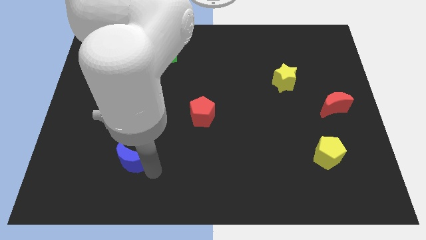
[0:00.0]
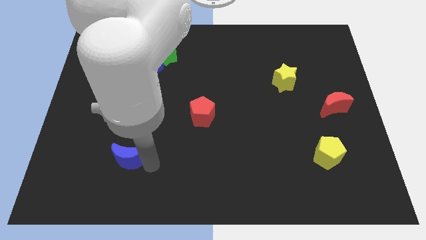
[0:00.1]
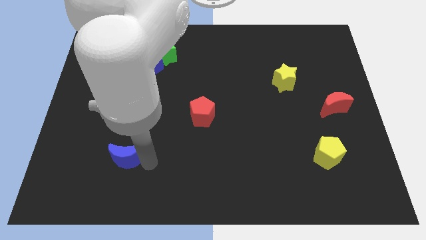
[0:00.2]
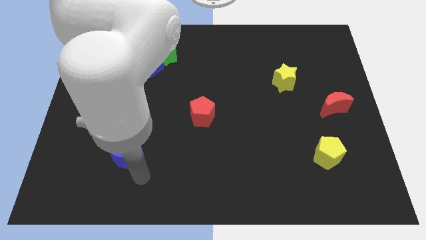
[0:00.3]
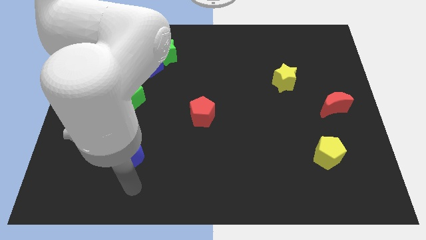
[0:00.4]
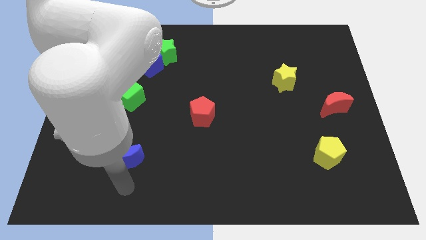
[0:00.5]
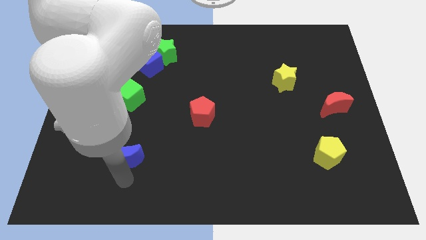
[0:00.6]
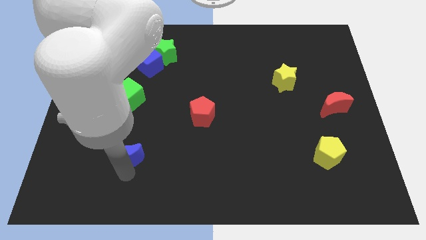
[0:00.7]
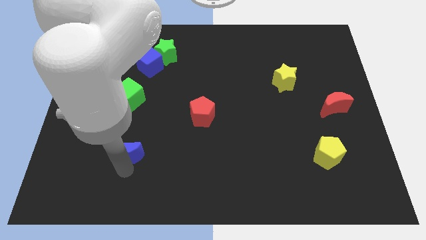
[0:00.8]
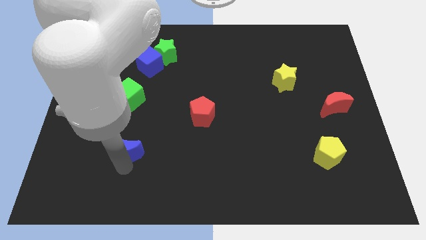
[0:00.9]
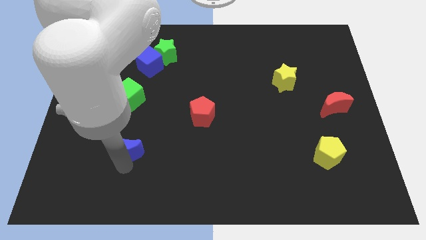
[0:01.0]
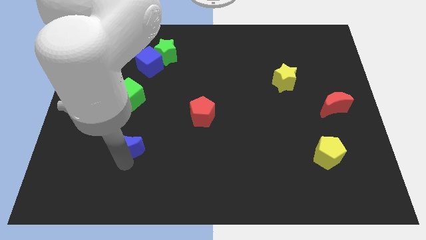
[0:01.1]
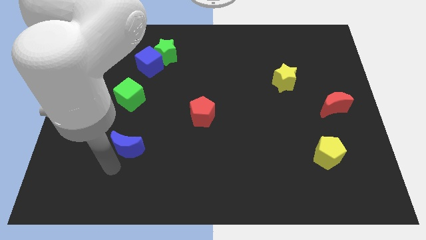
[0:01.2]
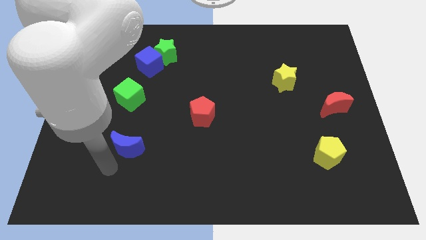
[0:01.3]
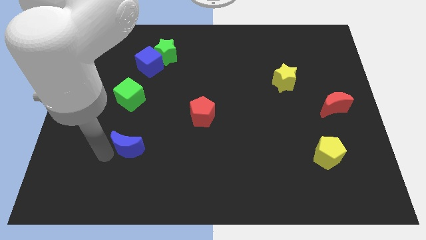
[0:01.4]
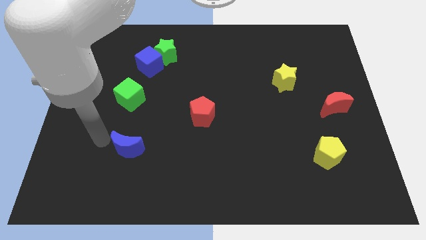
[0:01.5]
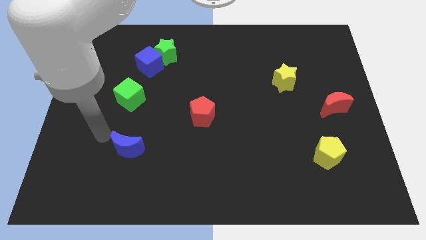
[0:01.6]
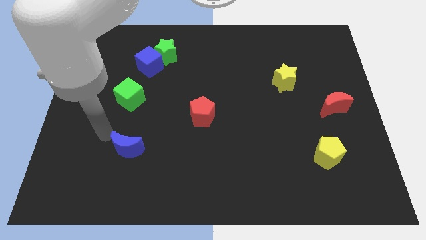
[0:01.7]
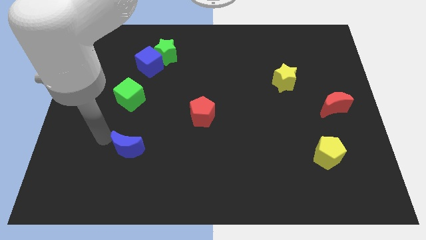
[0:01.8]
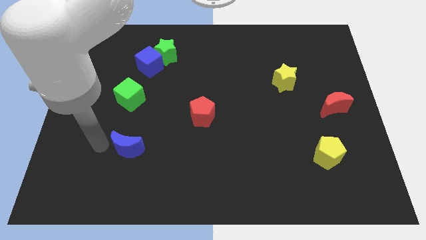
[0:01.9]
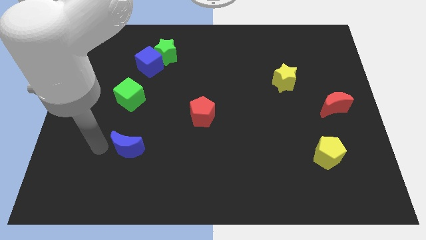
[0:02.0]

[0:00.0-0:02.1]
push the blue moon towards the green cube

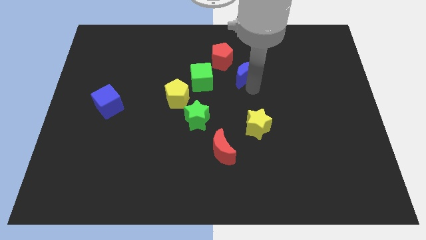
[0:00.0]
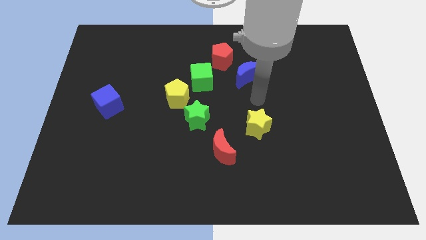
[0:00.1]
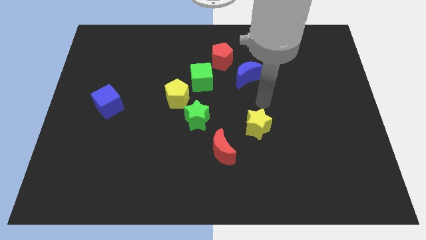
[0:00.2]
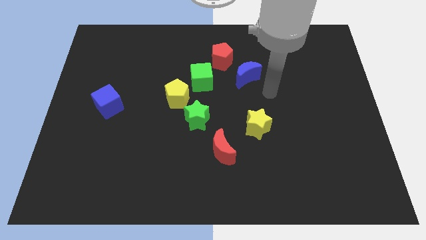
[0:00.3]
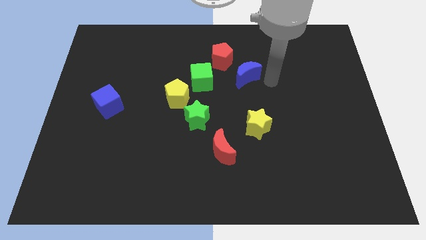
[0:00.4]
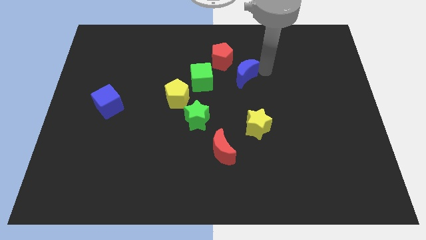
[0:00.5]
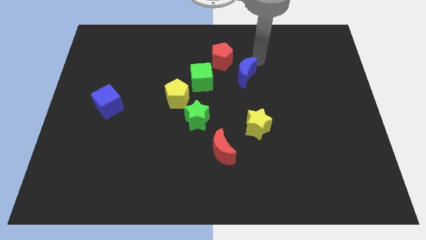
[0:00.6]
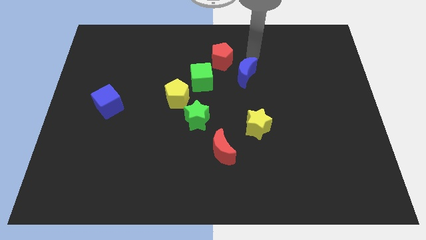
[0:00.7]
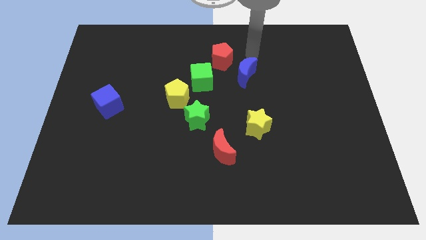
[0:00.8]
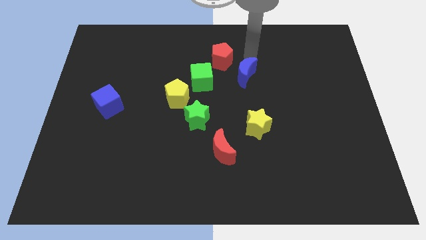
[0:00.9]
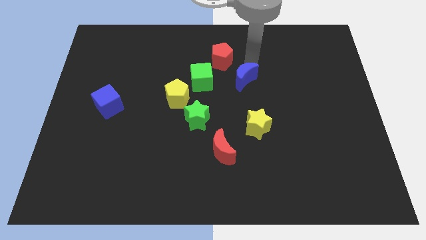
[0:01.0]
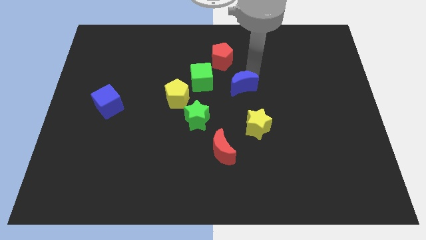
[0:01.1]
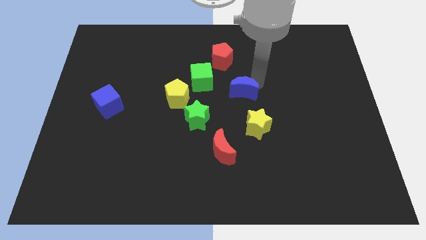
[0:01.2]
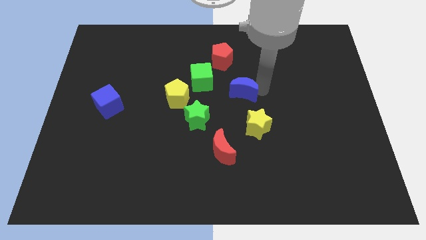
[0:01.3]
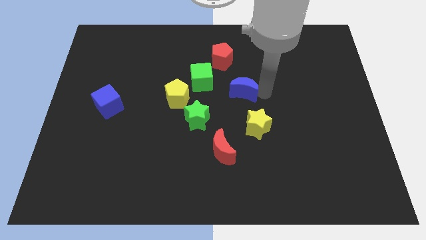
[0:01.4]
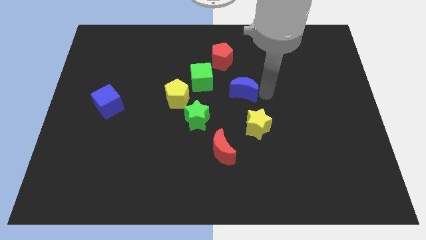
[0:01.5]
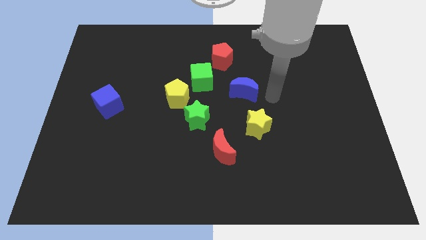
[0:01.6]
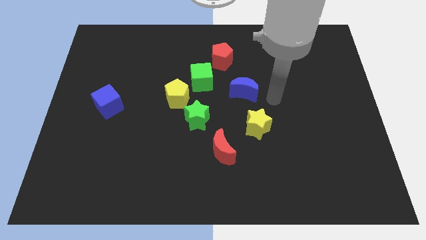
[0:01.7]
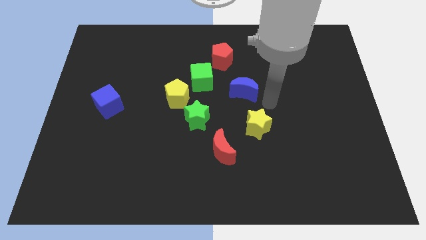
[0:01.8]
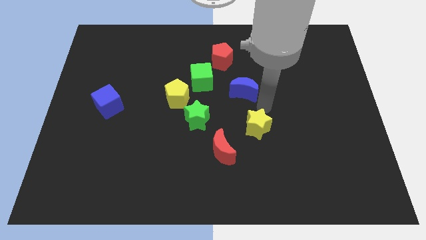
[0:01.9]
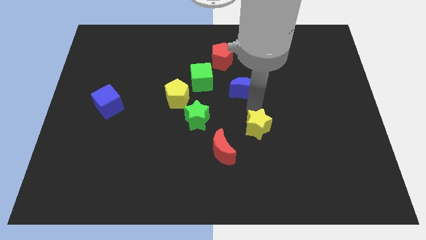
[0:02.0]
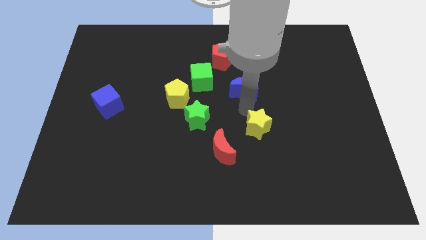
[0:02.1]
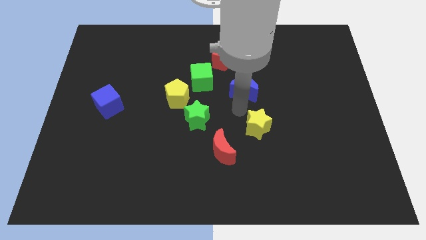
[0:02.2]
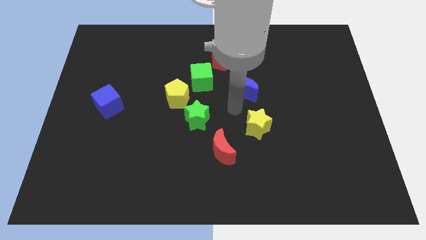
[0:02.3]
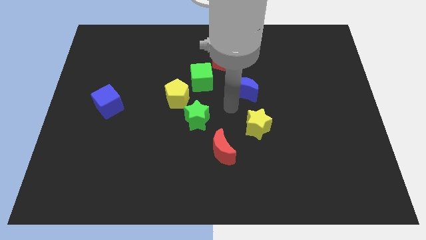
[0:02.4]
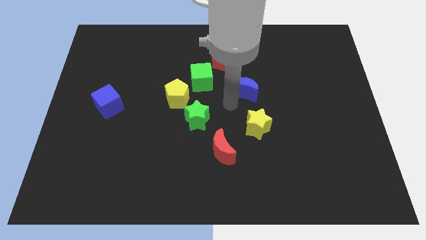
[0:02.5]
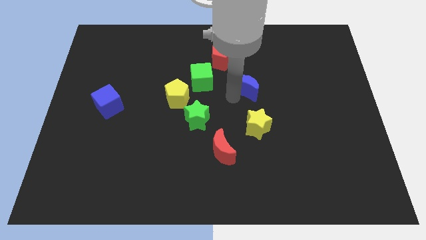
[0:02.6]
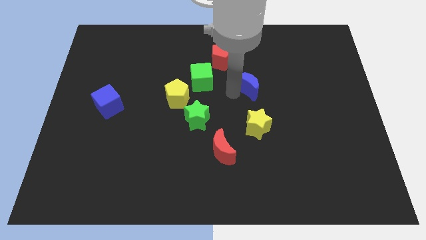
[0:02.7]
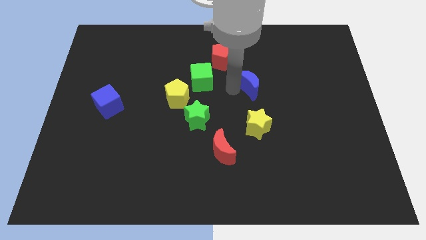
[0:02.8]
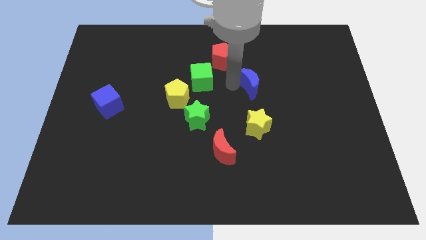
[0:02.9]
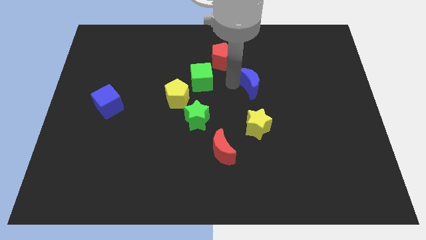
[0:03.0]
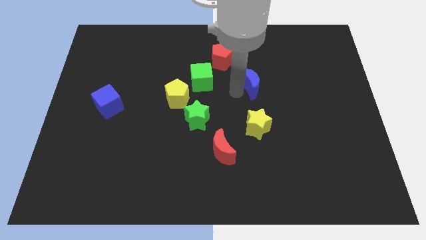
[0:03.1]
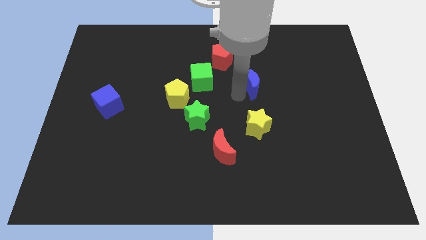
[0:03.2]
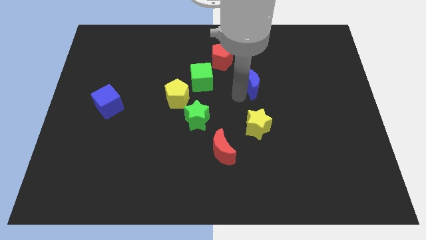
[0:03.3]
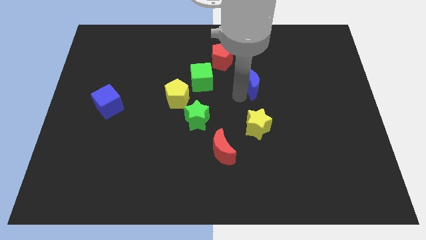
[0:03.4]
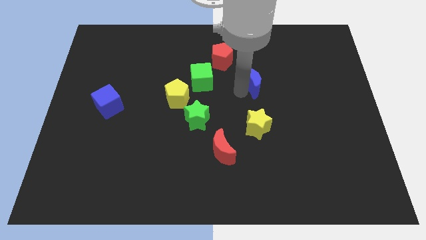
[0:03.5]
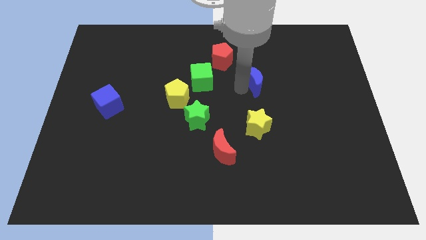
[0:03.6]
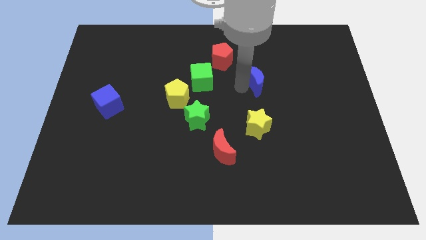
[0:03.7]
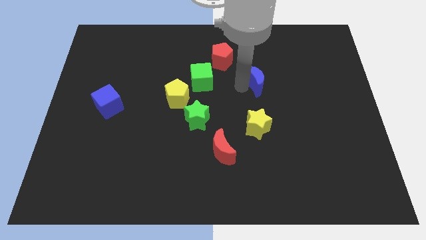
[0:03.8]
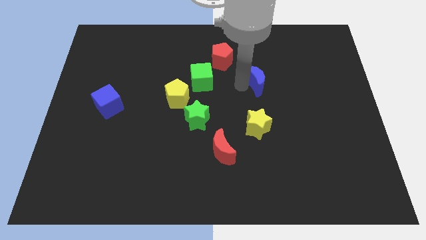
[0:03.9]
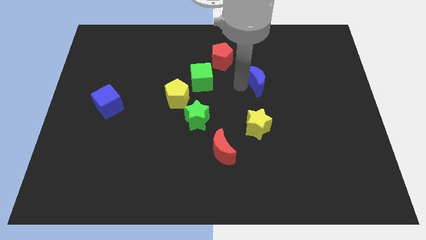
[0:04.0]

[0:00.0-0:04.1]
slide blue moon above yellow star

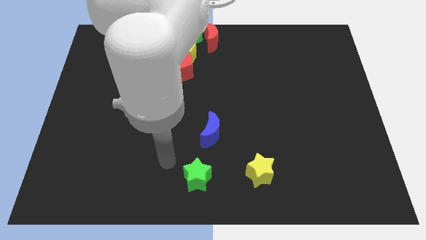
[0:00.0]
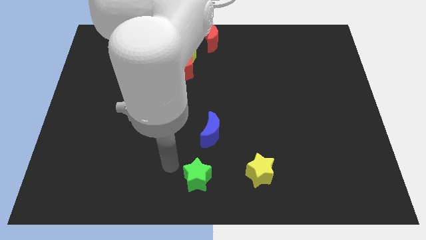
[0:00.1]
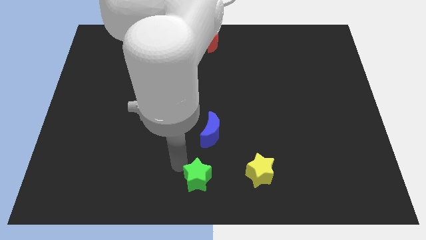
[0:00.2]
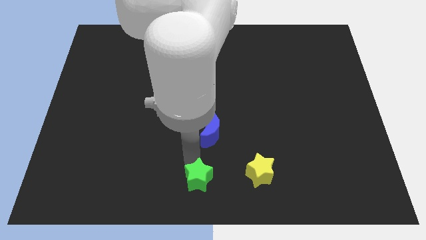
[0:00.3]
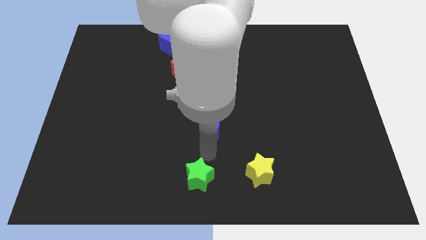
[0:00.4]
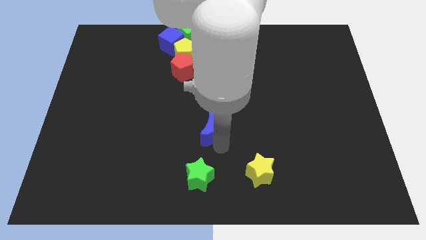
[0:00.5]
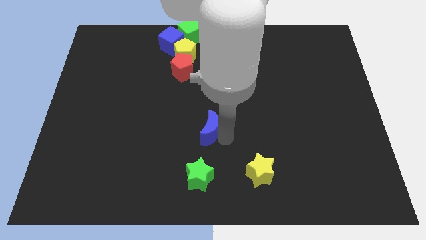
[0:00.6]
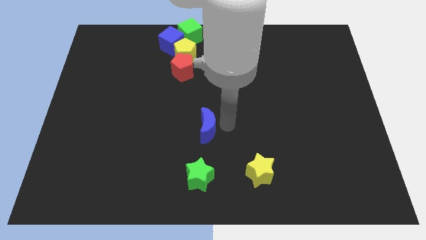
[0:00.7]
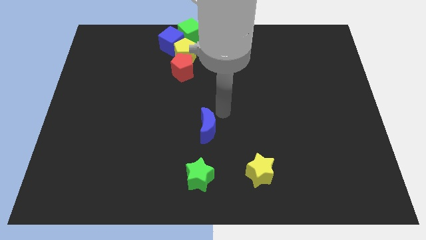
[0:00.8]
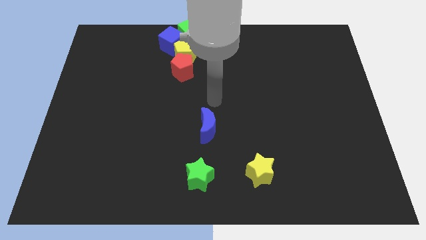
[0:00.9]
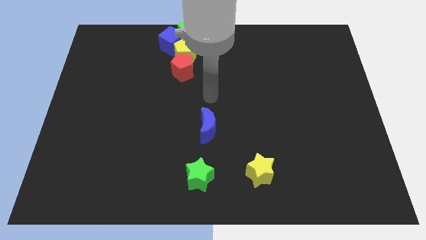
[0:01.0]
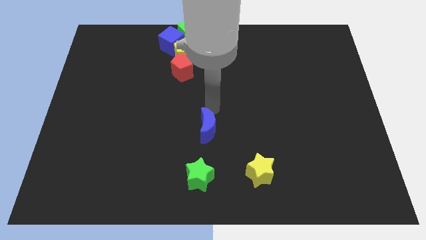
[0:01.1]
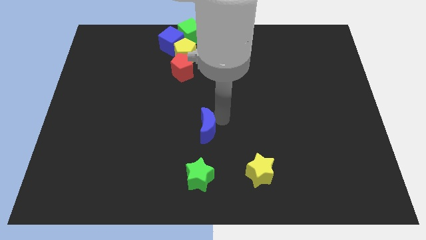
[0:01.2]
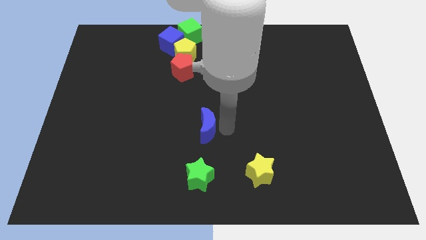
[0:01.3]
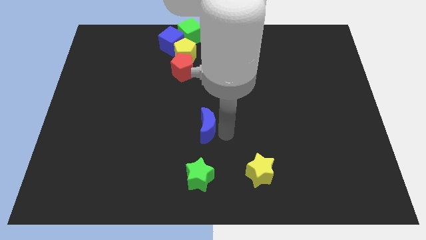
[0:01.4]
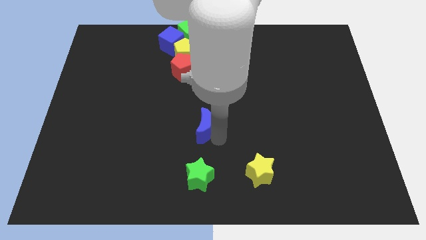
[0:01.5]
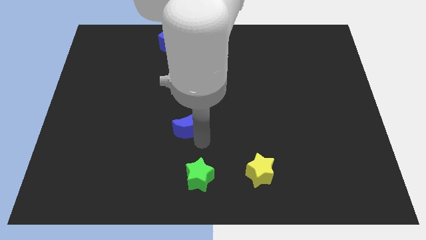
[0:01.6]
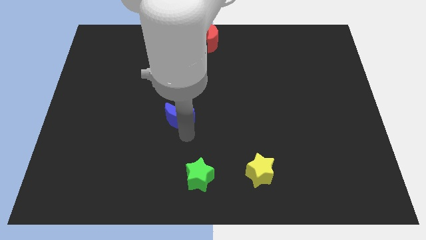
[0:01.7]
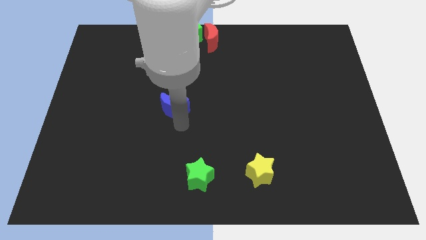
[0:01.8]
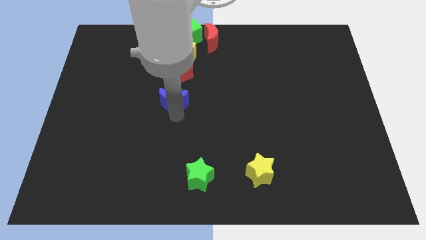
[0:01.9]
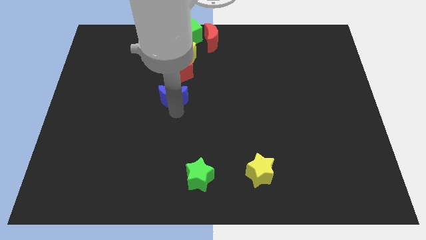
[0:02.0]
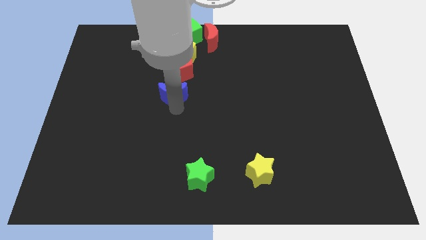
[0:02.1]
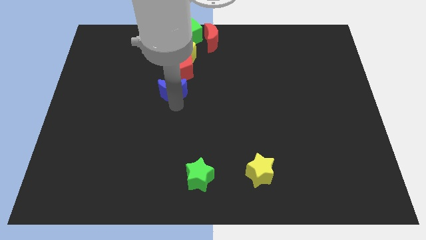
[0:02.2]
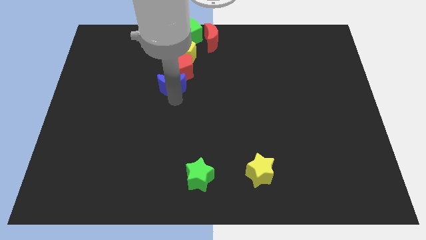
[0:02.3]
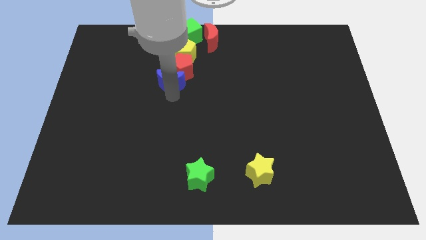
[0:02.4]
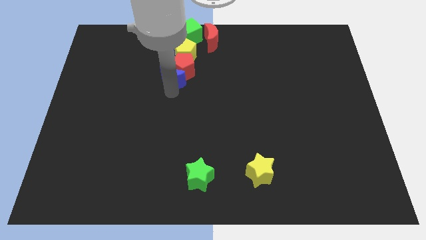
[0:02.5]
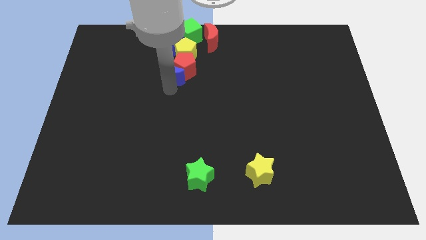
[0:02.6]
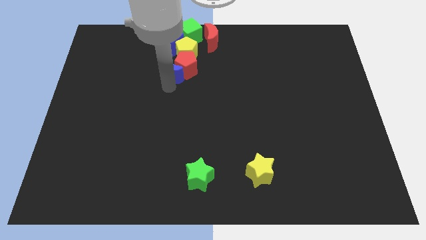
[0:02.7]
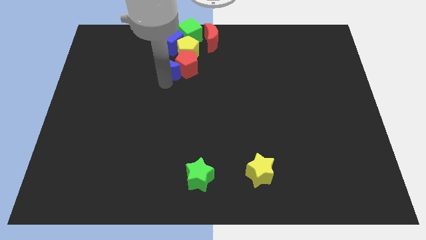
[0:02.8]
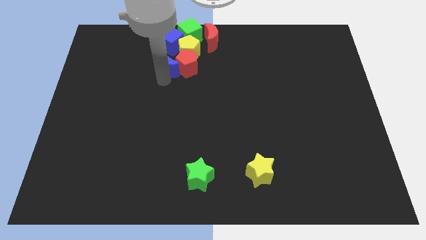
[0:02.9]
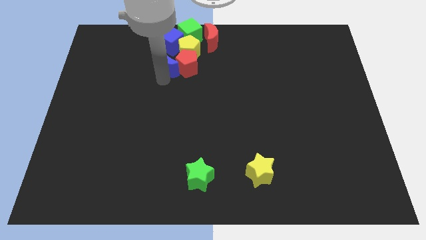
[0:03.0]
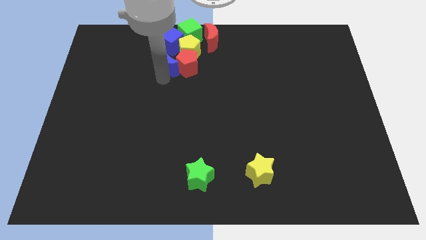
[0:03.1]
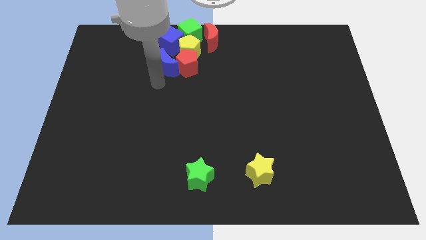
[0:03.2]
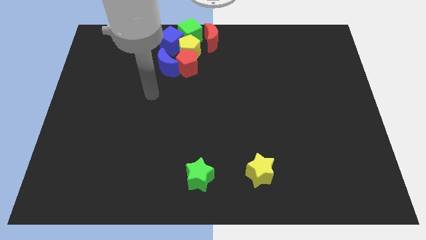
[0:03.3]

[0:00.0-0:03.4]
push the blue crescent close to the red pentagon
